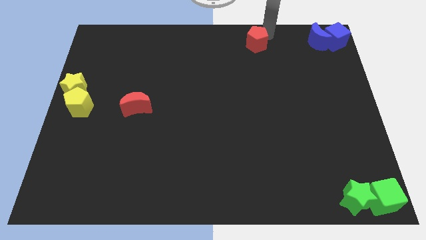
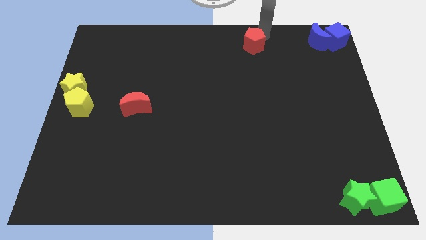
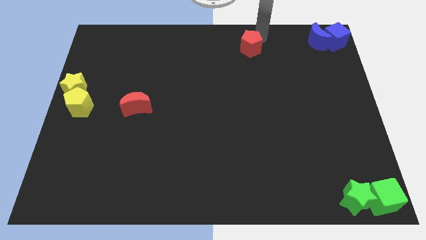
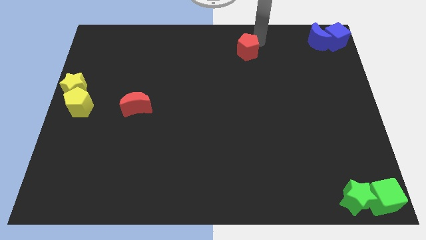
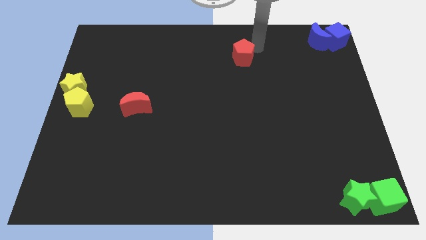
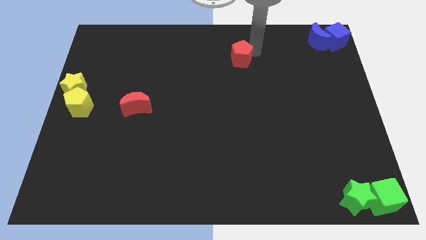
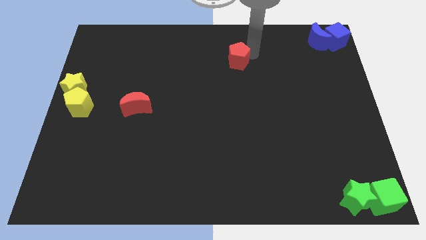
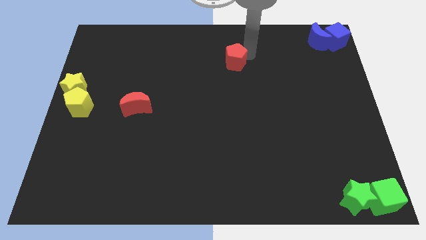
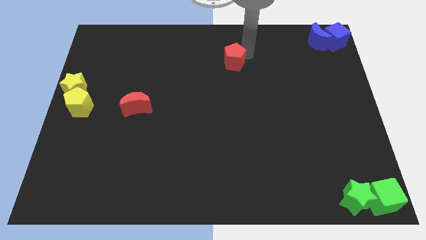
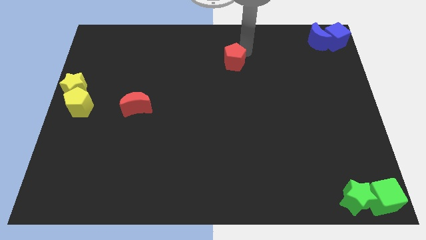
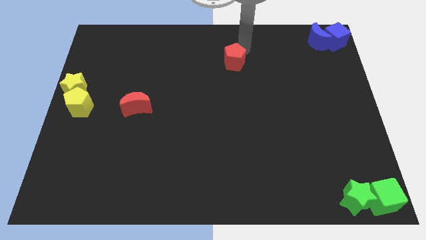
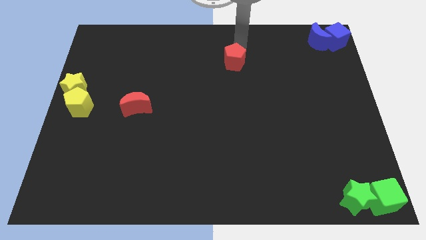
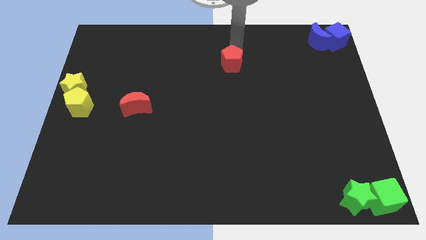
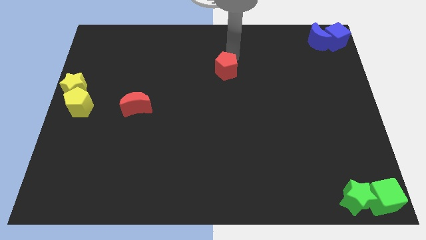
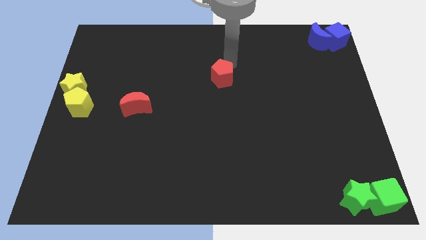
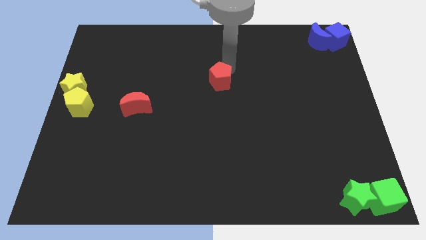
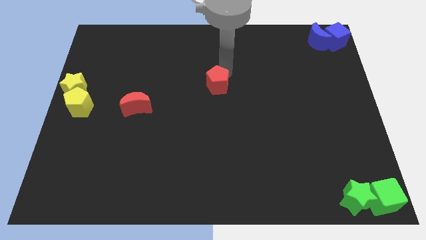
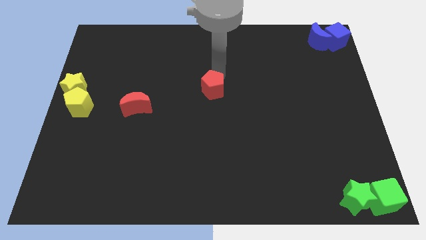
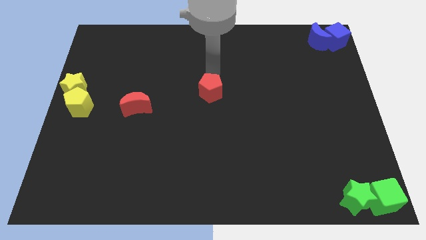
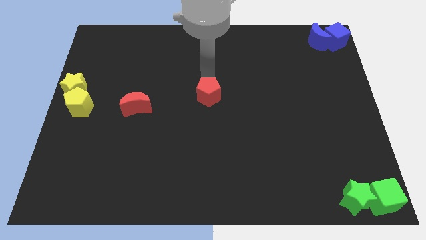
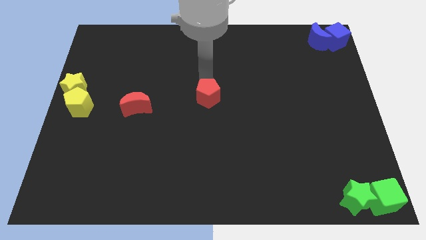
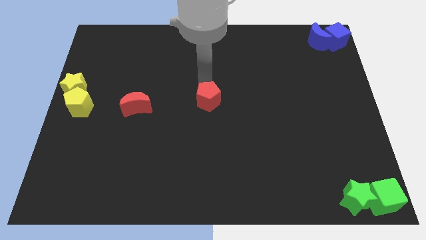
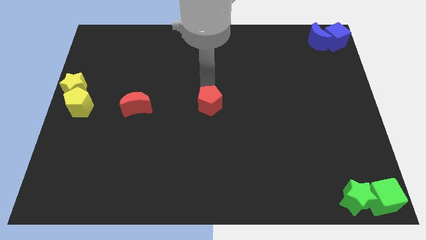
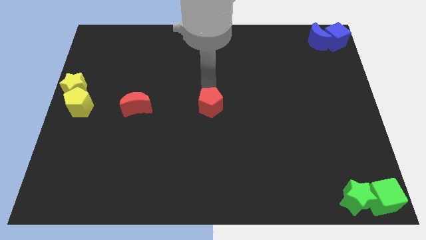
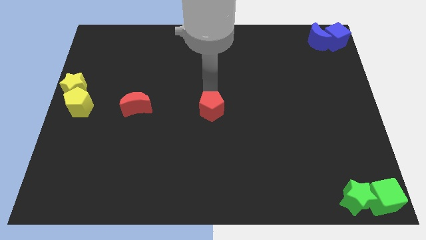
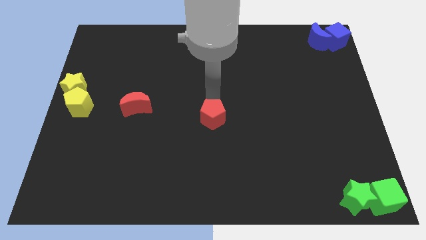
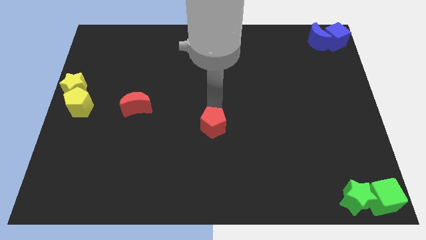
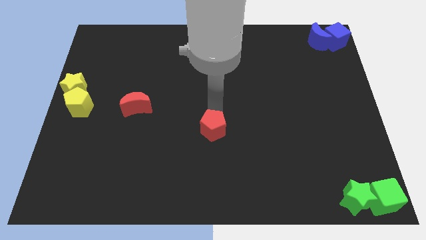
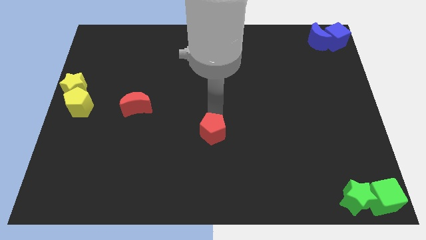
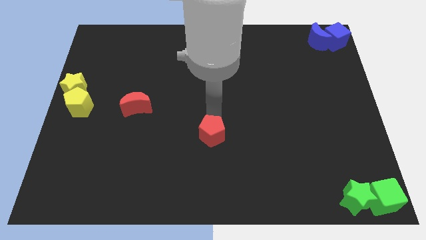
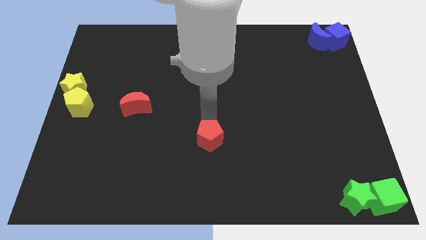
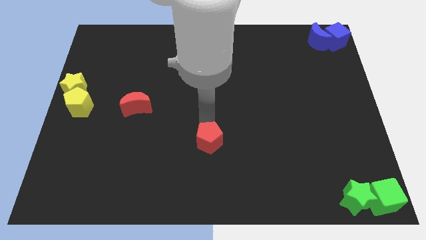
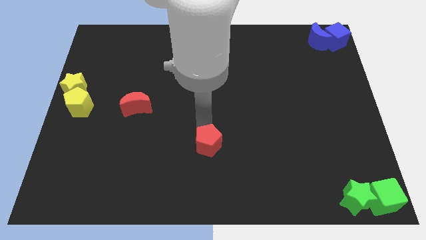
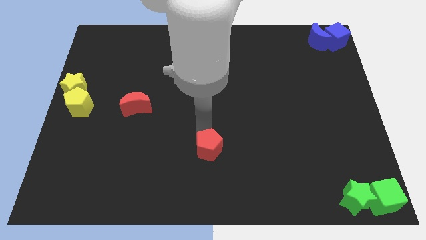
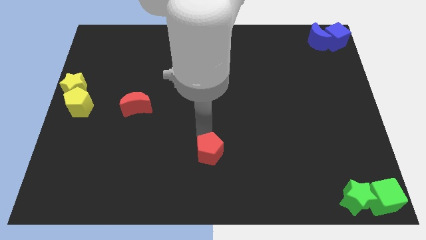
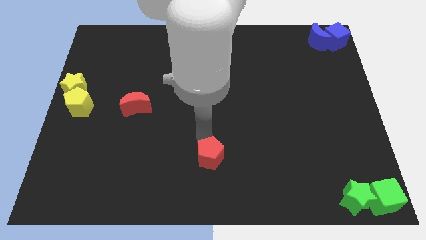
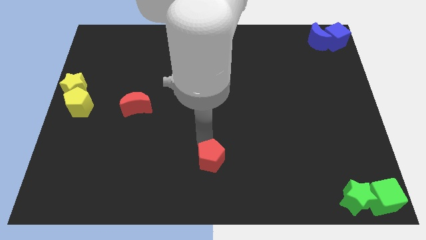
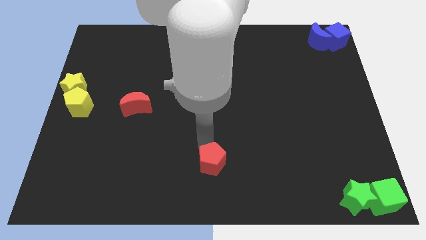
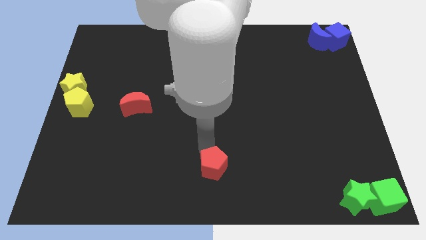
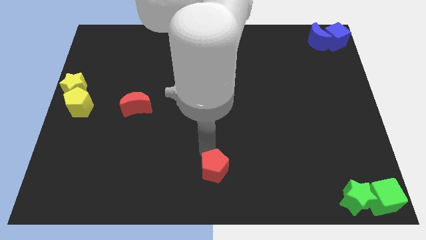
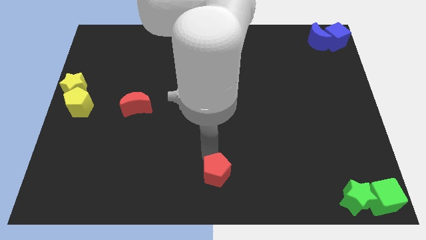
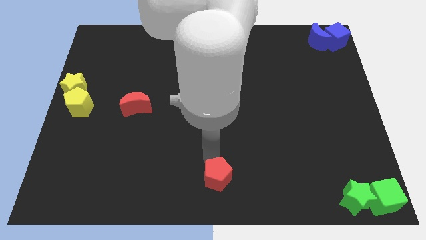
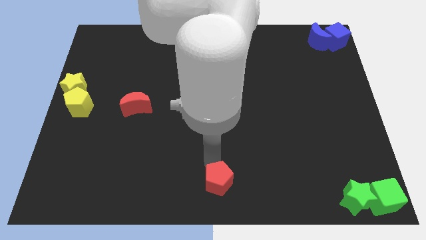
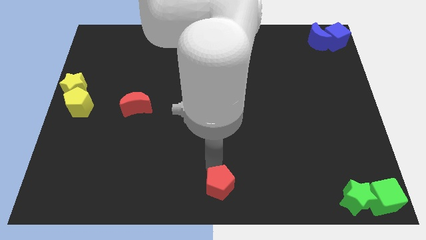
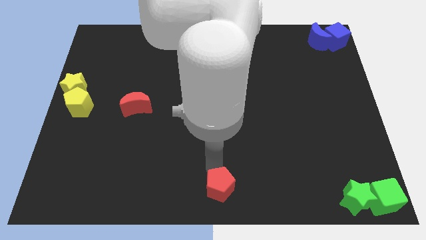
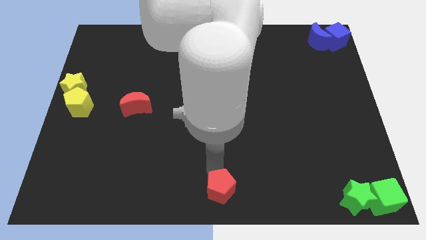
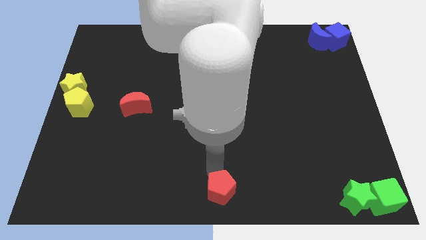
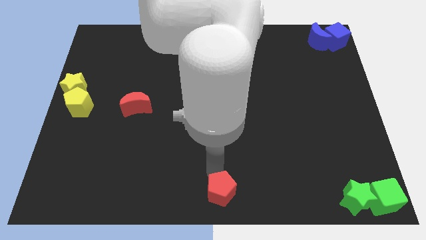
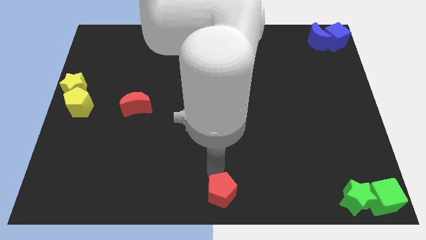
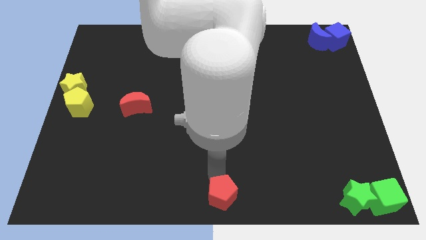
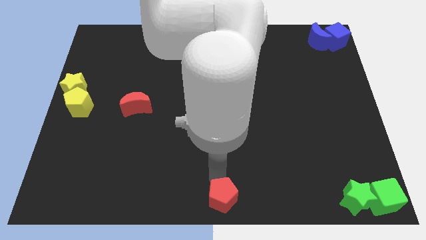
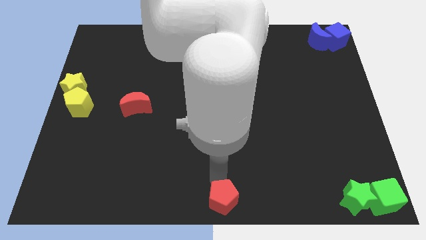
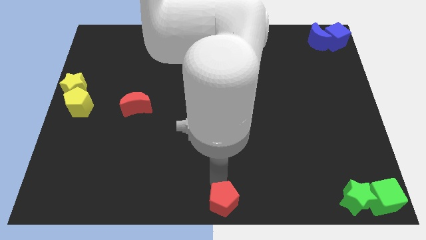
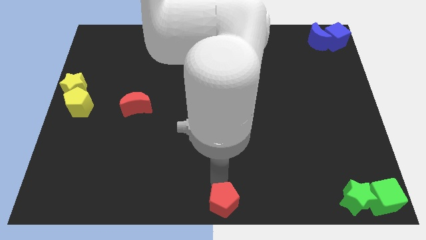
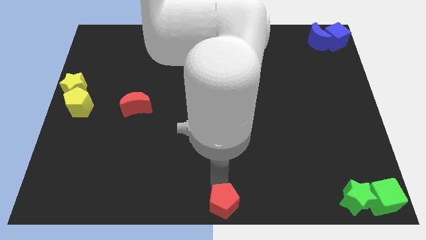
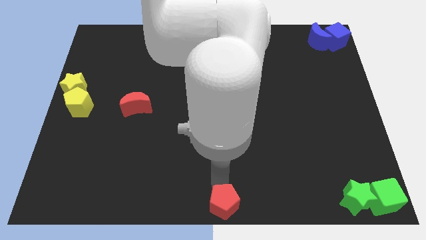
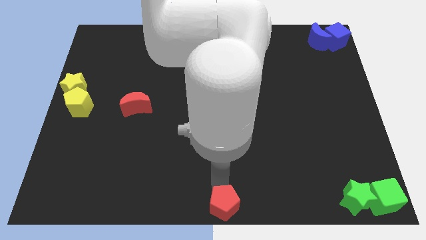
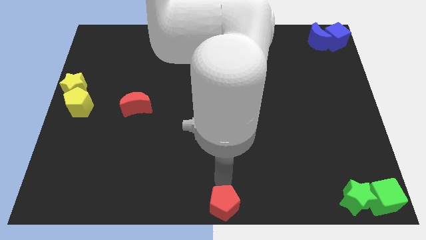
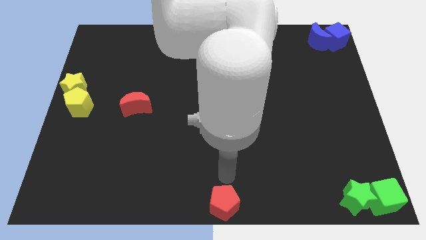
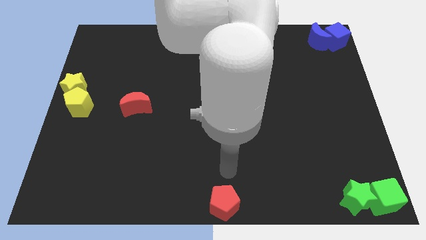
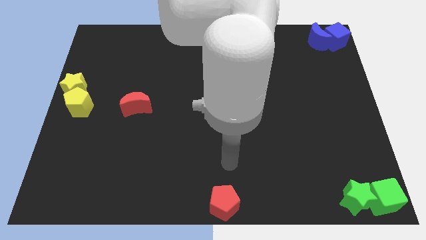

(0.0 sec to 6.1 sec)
place the red pentagon to the bottom center of board

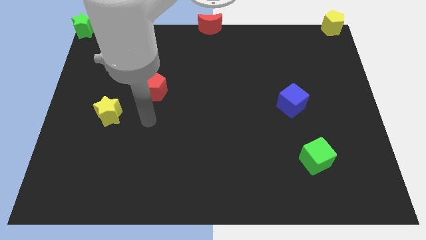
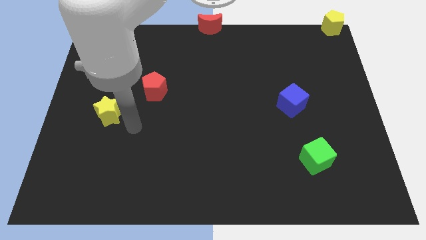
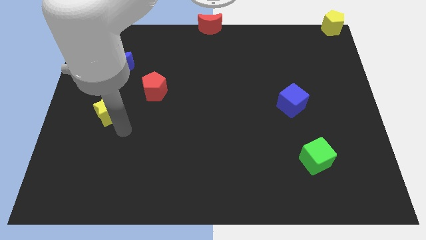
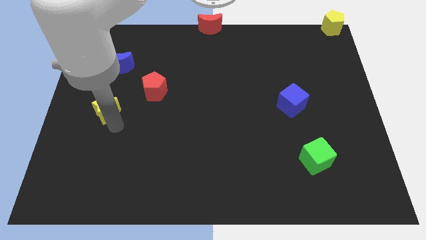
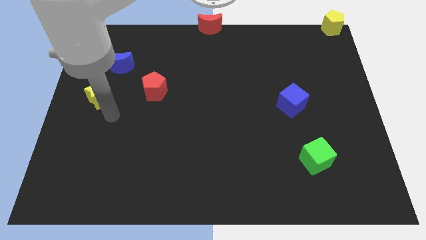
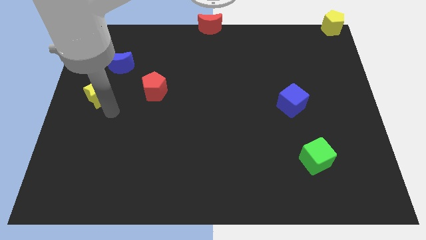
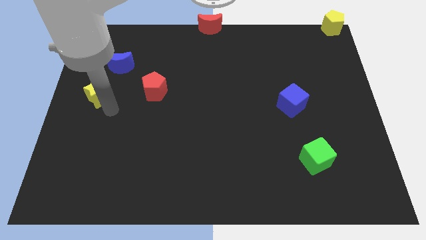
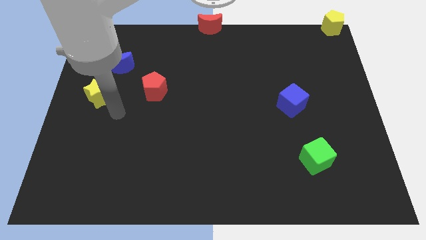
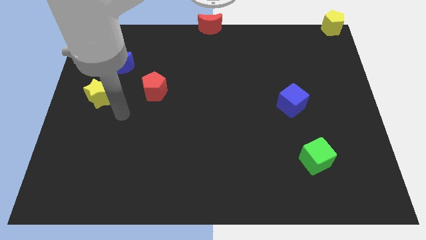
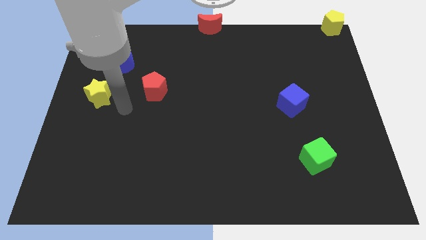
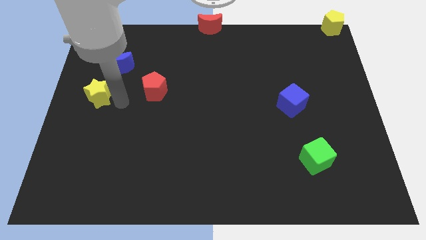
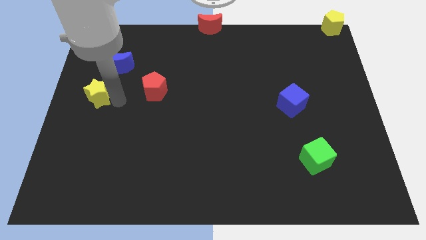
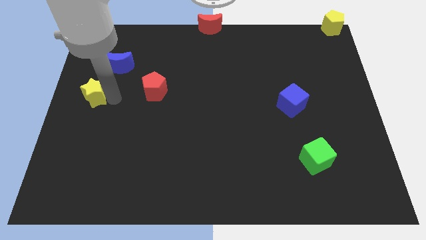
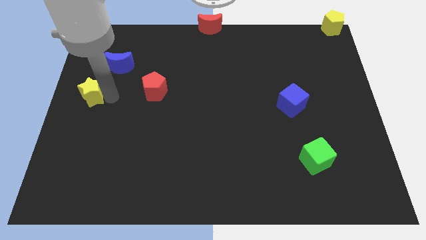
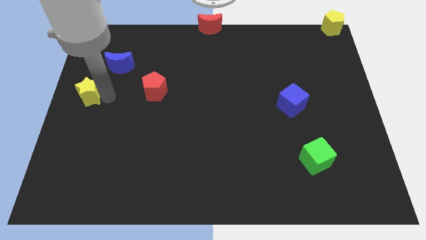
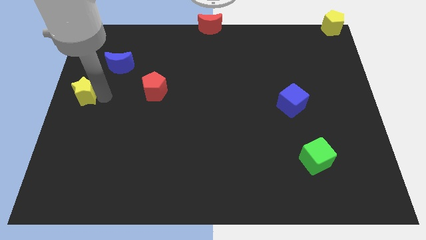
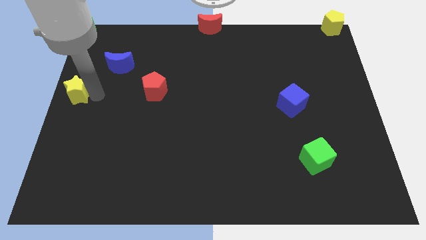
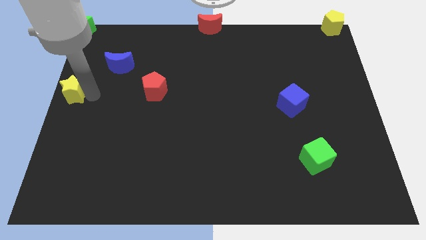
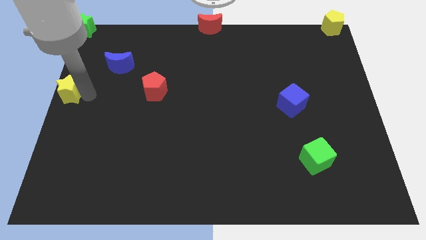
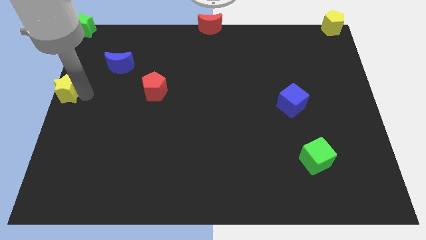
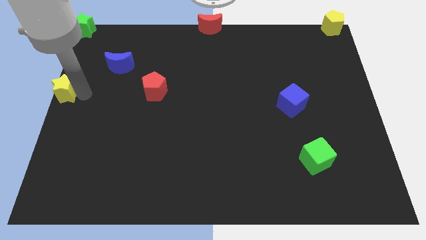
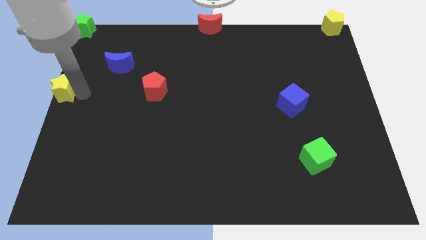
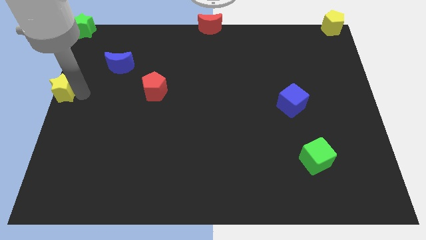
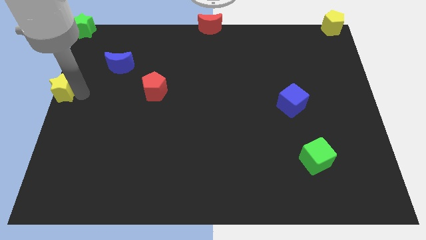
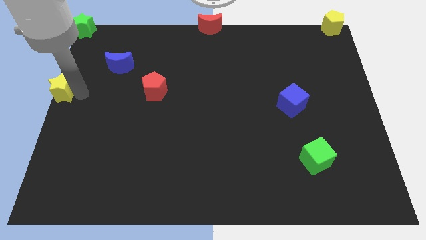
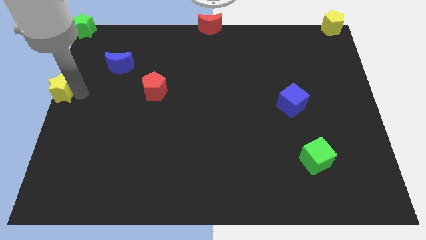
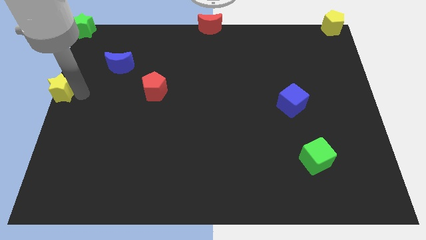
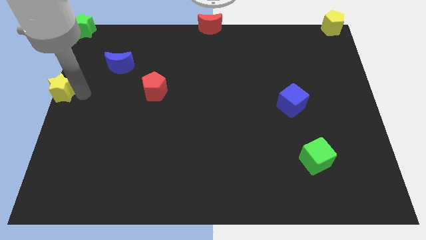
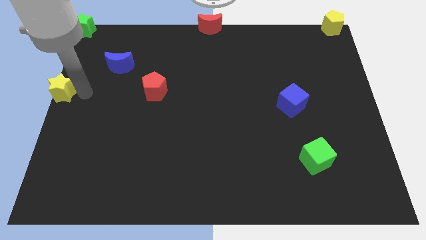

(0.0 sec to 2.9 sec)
move the yellow star to the center left of the board

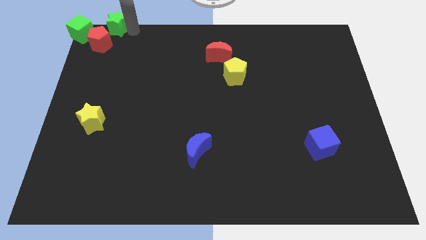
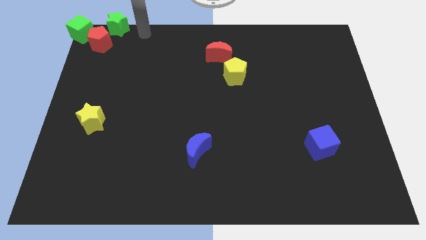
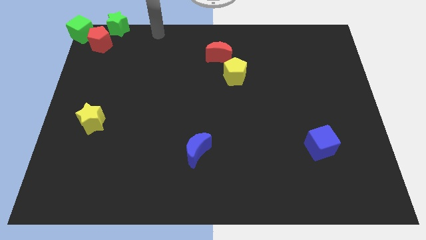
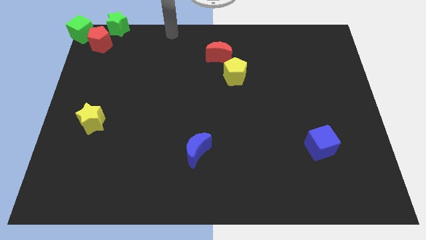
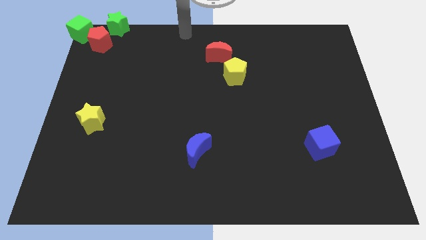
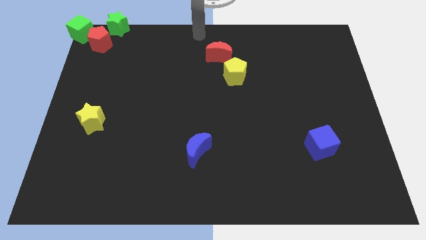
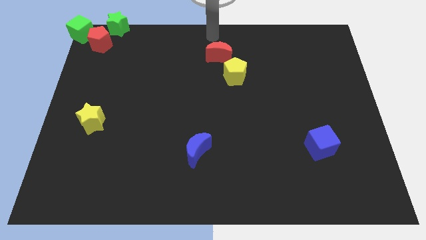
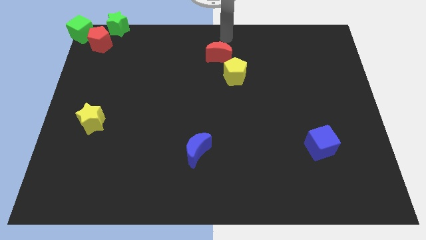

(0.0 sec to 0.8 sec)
move your arm at the top of red moon
